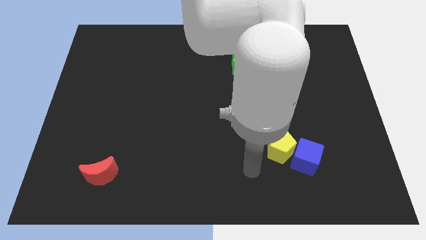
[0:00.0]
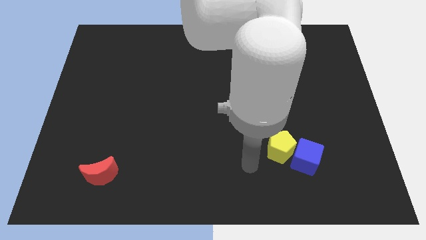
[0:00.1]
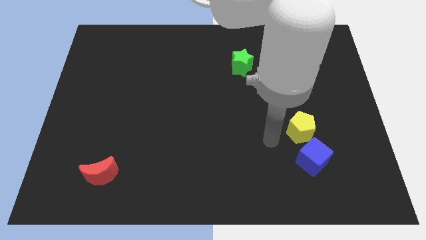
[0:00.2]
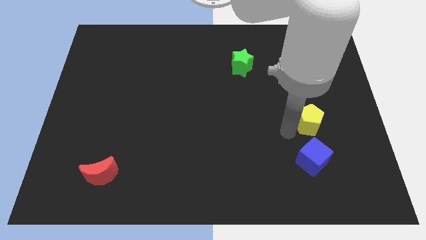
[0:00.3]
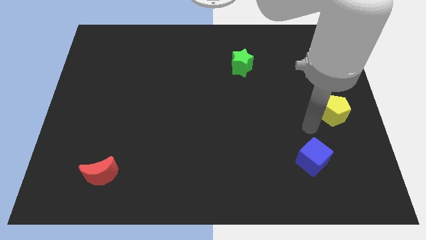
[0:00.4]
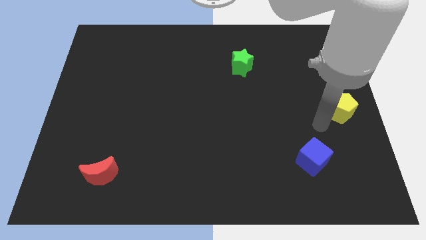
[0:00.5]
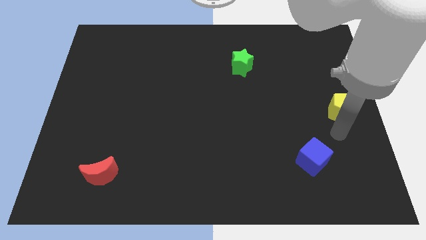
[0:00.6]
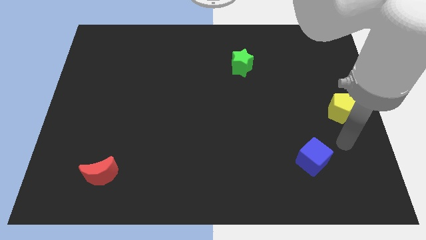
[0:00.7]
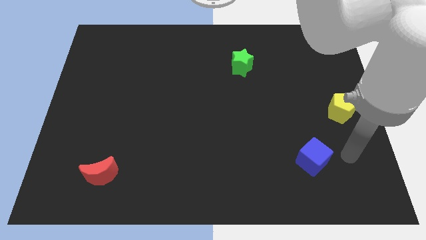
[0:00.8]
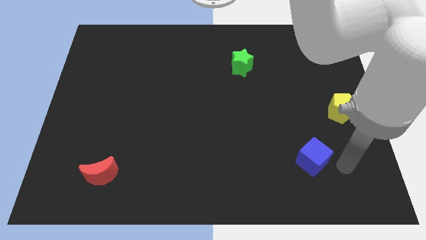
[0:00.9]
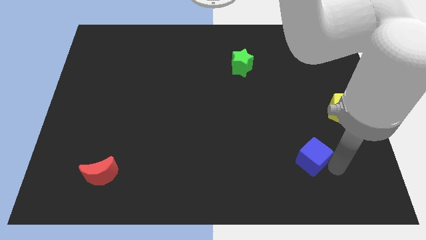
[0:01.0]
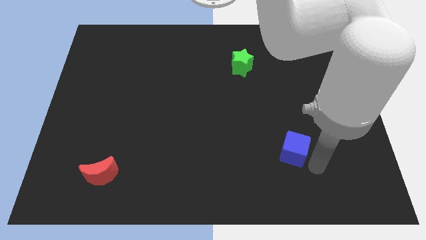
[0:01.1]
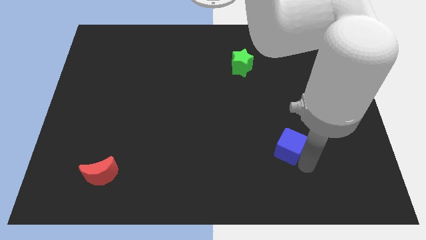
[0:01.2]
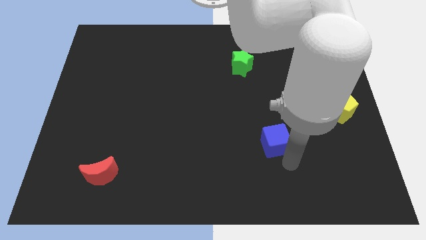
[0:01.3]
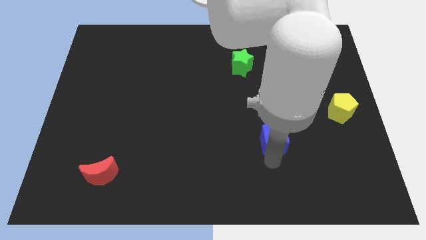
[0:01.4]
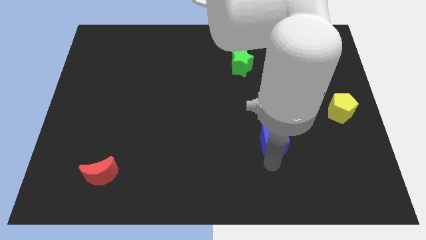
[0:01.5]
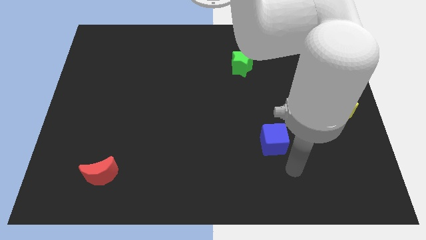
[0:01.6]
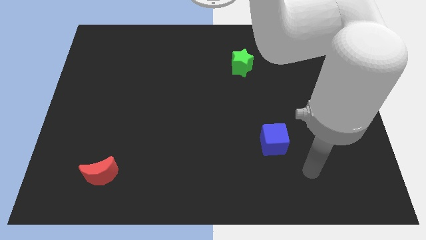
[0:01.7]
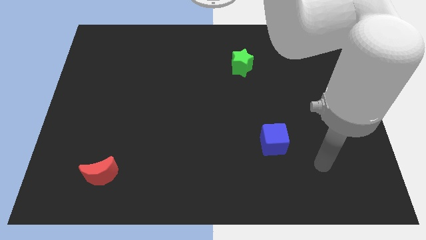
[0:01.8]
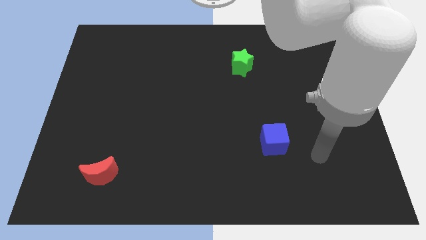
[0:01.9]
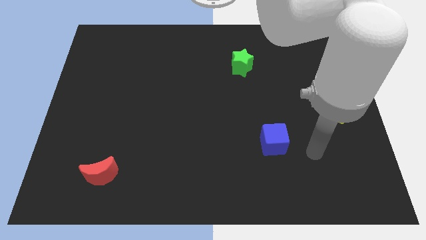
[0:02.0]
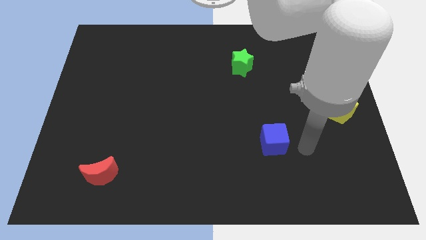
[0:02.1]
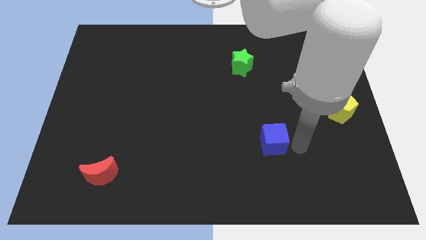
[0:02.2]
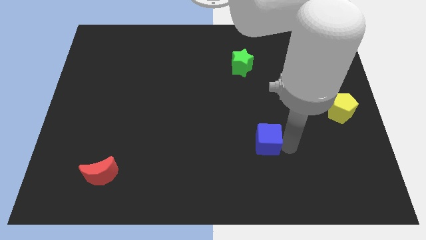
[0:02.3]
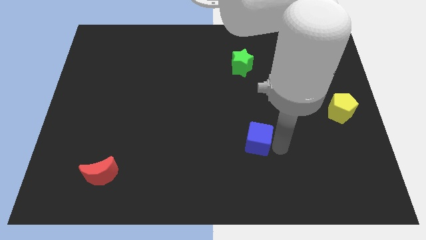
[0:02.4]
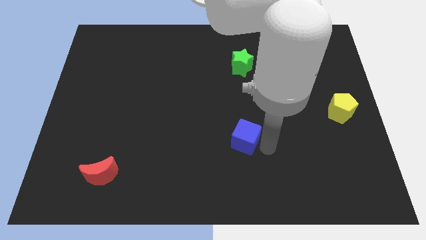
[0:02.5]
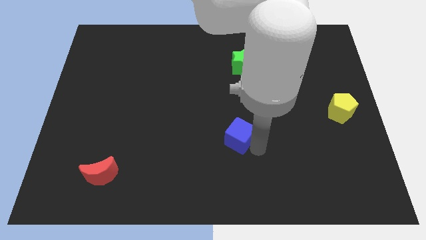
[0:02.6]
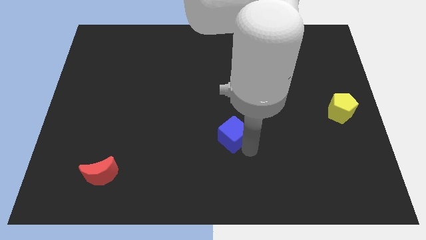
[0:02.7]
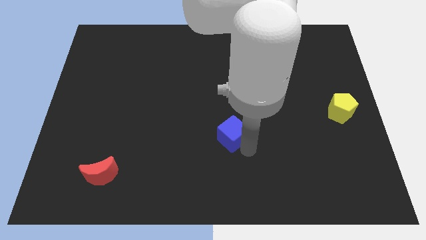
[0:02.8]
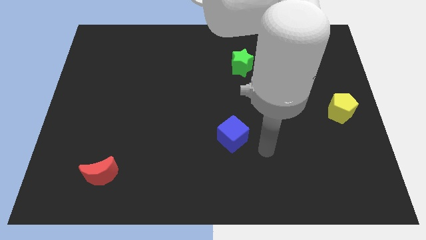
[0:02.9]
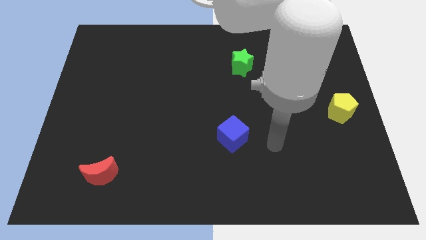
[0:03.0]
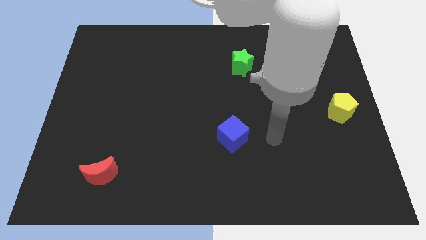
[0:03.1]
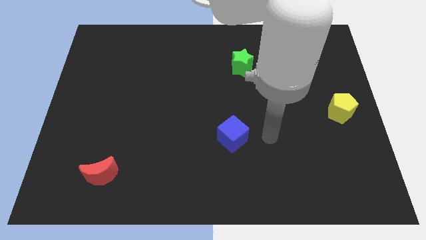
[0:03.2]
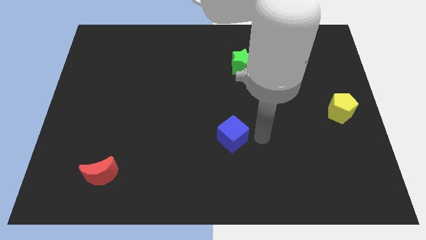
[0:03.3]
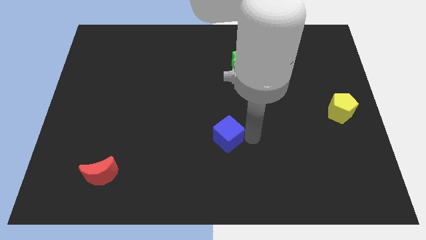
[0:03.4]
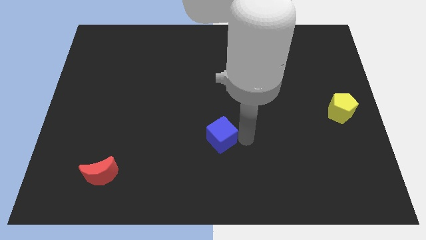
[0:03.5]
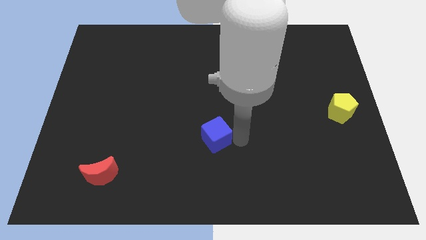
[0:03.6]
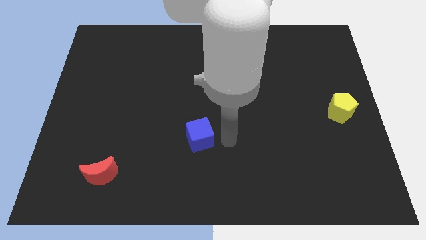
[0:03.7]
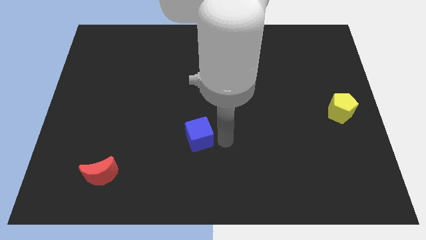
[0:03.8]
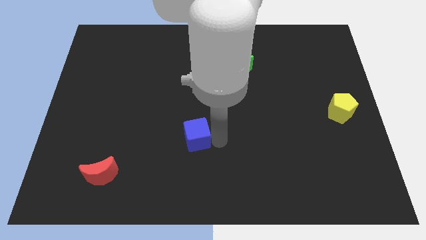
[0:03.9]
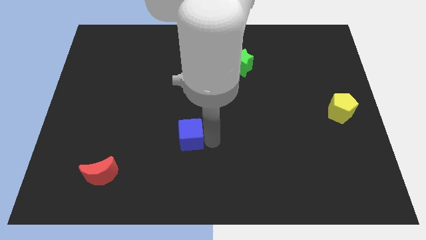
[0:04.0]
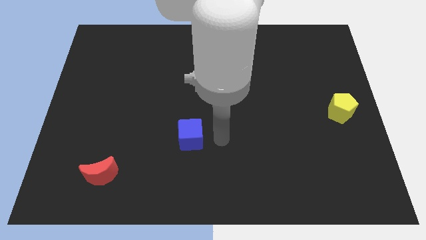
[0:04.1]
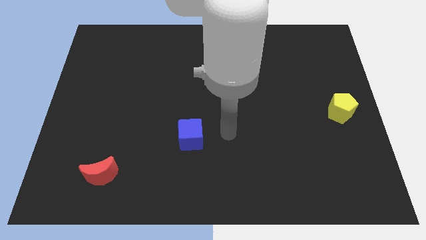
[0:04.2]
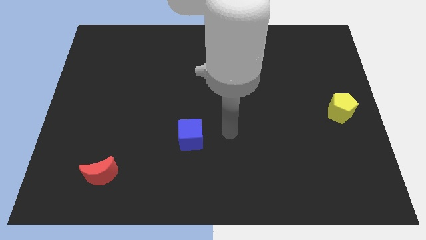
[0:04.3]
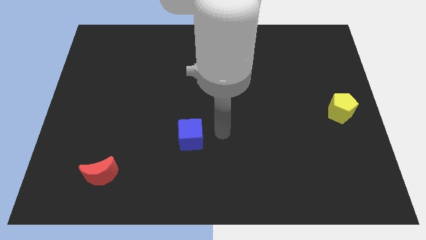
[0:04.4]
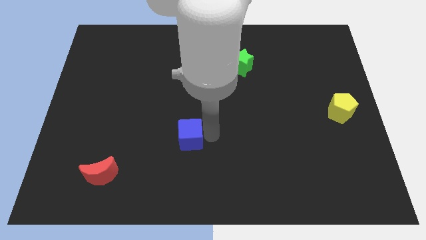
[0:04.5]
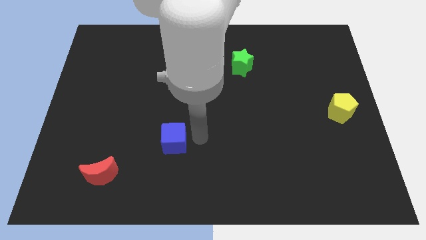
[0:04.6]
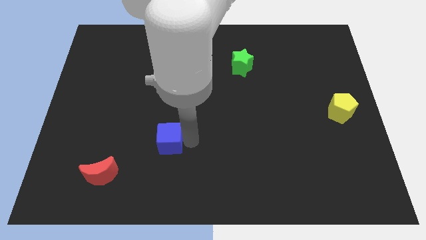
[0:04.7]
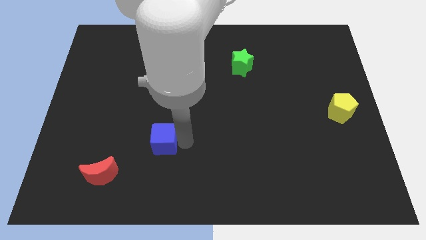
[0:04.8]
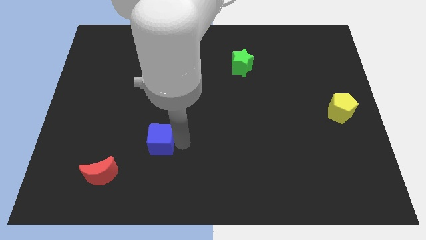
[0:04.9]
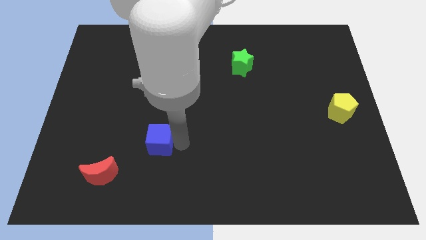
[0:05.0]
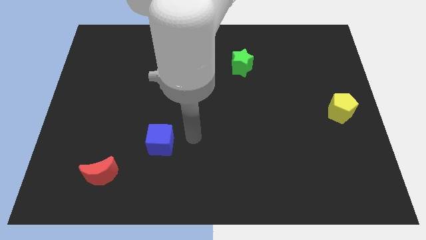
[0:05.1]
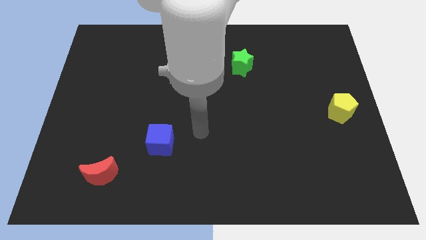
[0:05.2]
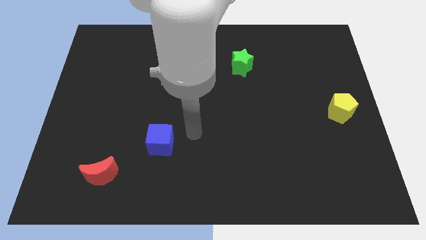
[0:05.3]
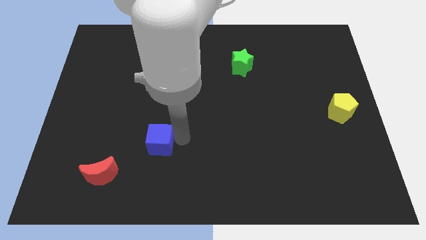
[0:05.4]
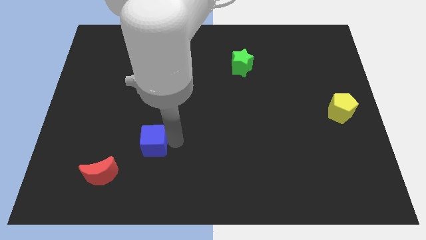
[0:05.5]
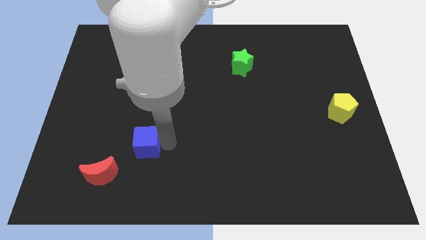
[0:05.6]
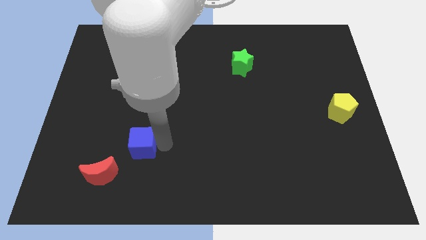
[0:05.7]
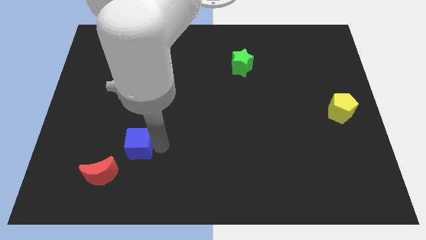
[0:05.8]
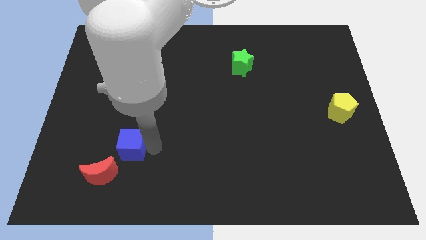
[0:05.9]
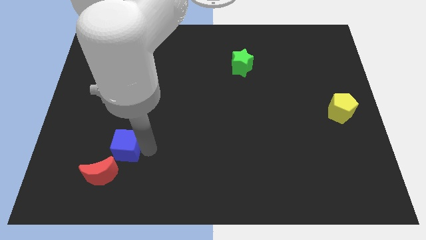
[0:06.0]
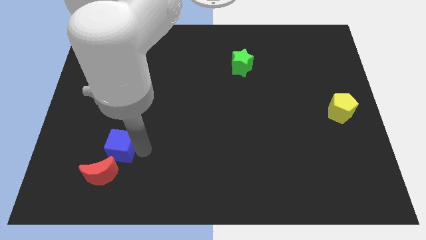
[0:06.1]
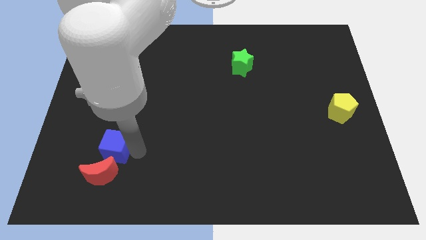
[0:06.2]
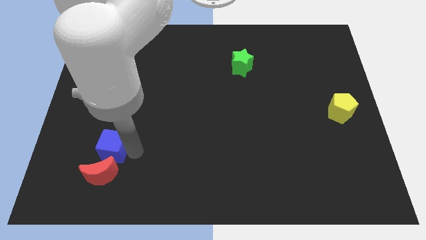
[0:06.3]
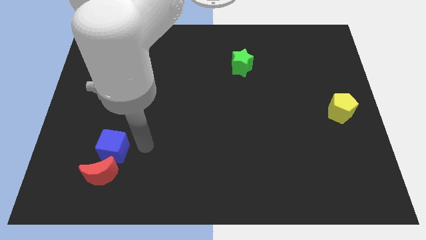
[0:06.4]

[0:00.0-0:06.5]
move the blue cube to the red moon

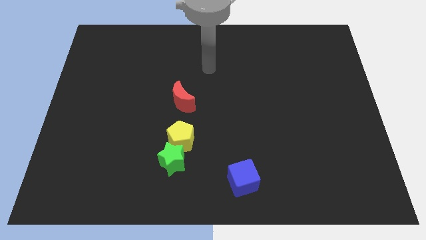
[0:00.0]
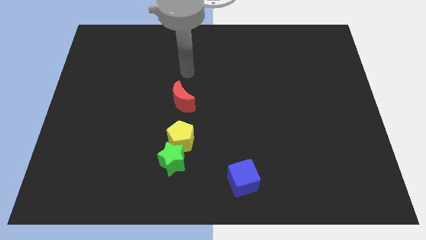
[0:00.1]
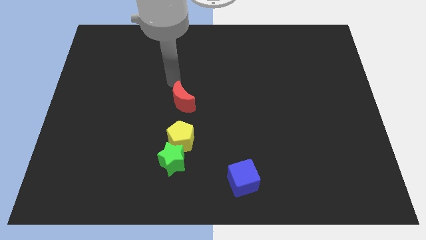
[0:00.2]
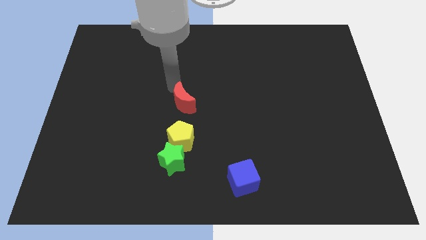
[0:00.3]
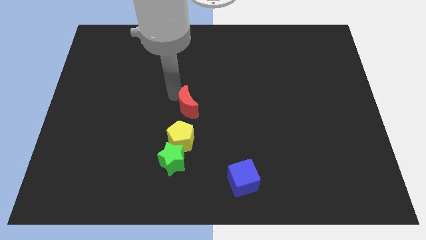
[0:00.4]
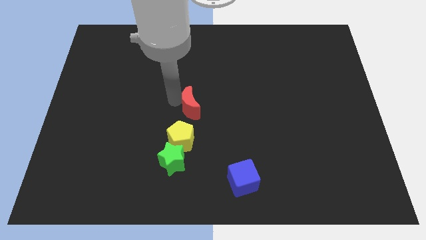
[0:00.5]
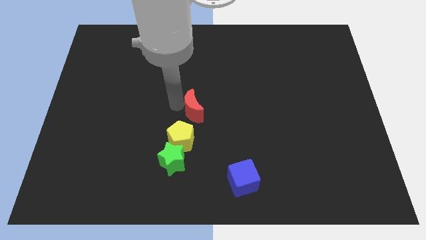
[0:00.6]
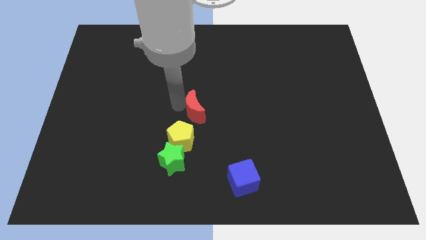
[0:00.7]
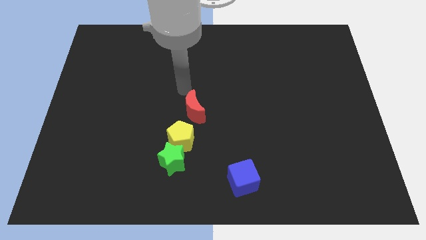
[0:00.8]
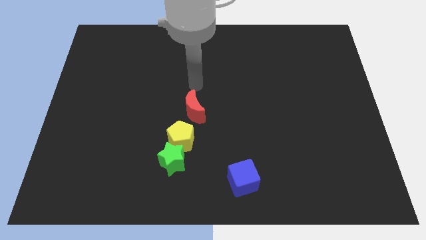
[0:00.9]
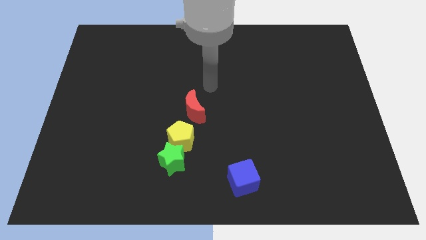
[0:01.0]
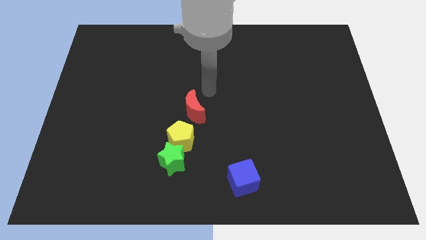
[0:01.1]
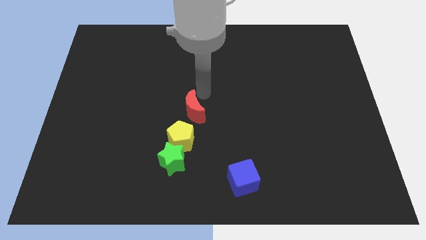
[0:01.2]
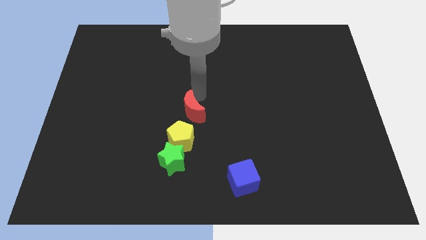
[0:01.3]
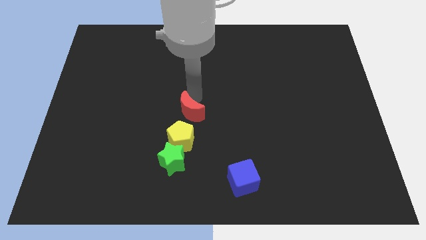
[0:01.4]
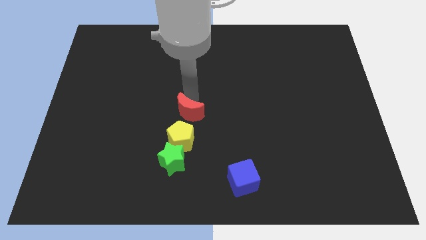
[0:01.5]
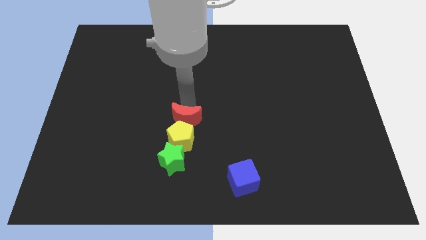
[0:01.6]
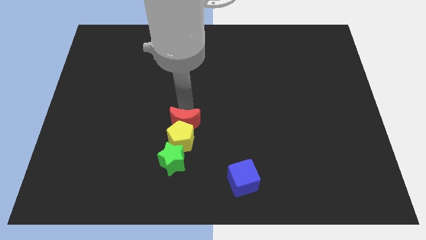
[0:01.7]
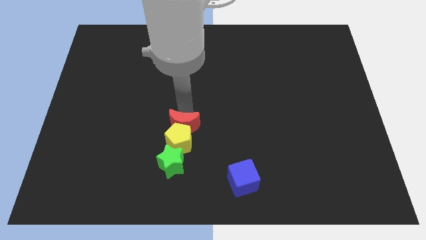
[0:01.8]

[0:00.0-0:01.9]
slide the red block to the yellow block

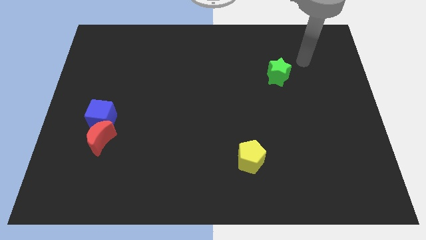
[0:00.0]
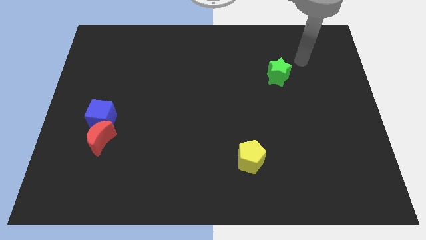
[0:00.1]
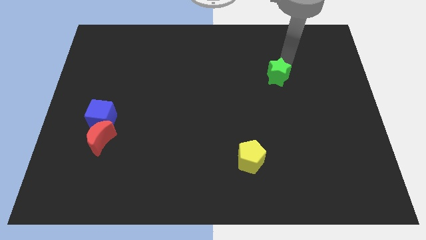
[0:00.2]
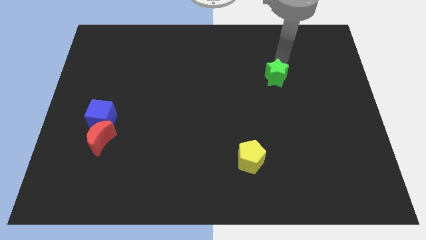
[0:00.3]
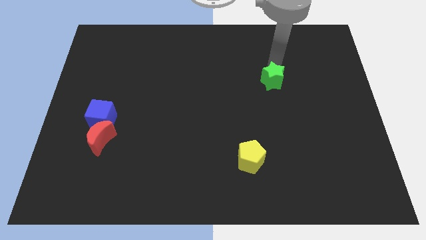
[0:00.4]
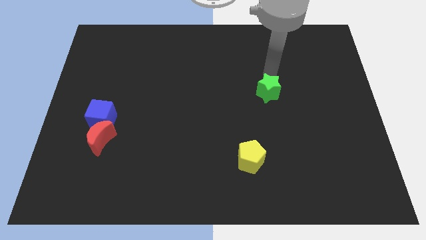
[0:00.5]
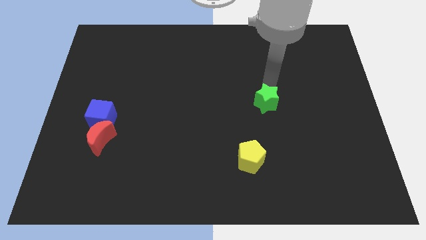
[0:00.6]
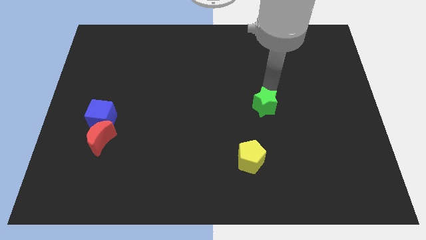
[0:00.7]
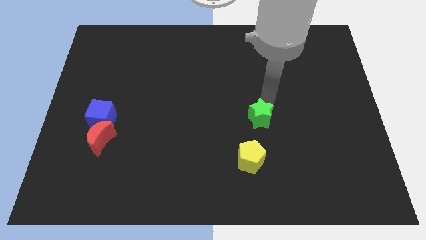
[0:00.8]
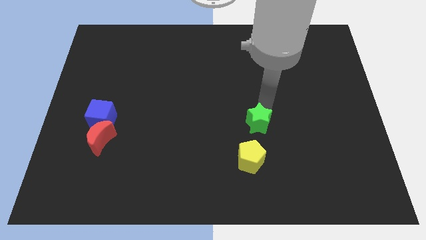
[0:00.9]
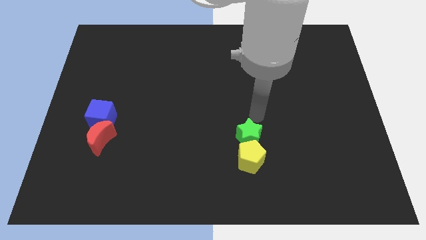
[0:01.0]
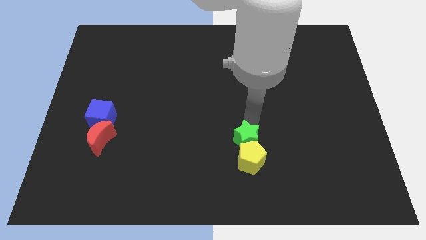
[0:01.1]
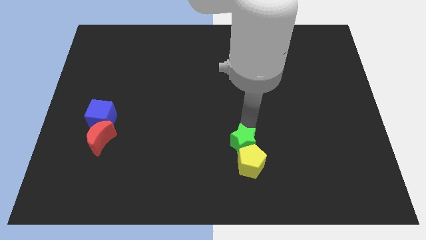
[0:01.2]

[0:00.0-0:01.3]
slide the green star next to the yellow block
